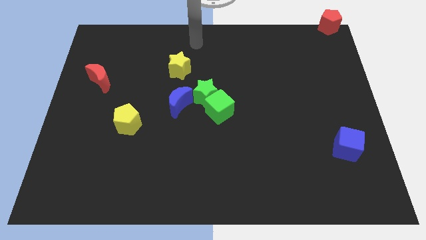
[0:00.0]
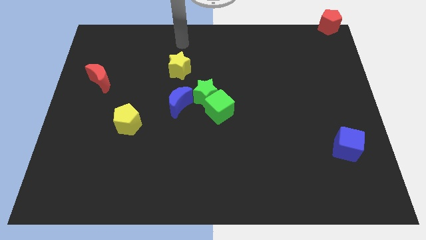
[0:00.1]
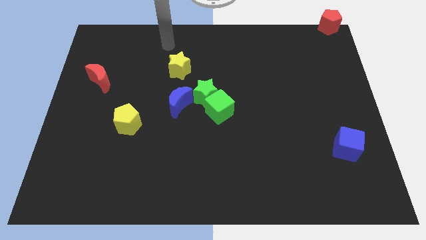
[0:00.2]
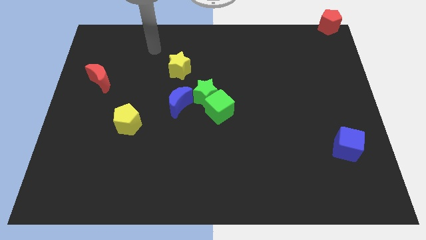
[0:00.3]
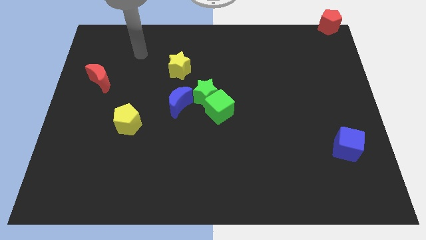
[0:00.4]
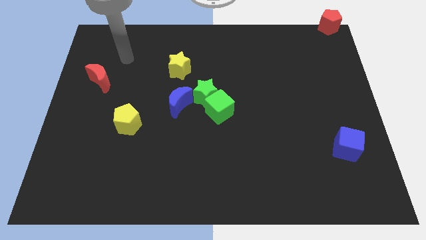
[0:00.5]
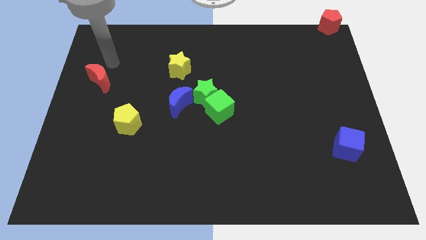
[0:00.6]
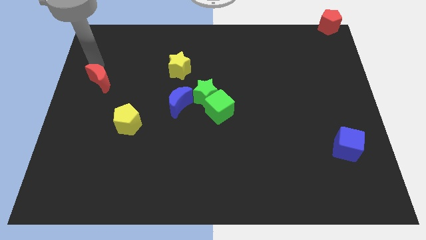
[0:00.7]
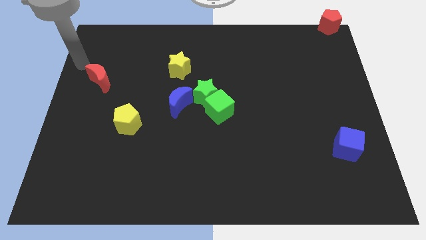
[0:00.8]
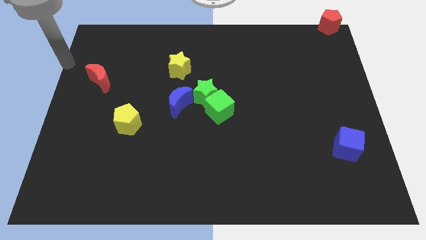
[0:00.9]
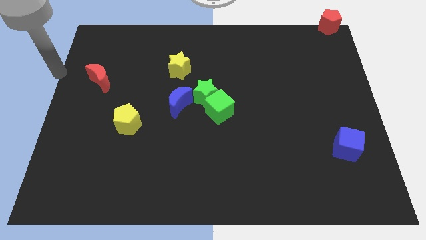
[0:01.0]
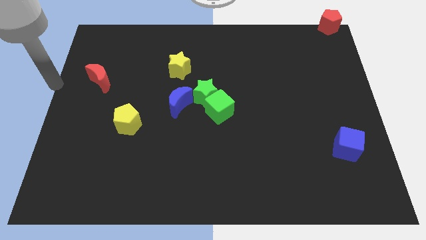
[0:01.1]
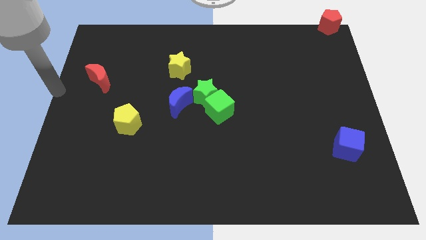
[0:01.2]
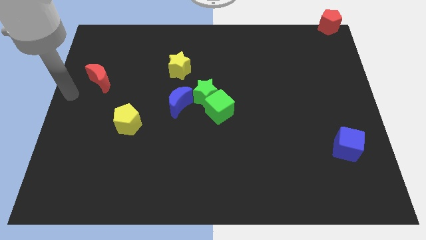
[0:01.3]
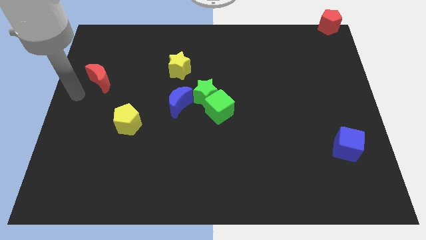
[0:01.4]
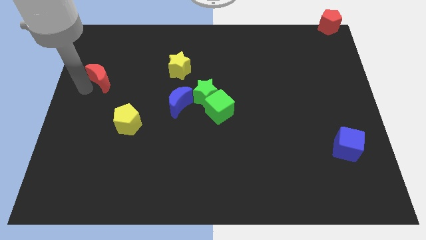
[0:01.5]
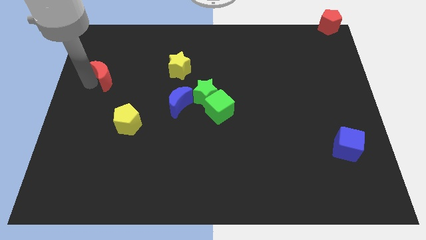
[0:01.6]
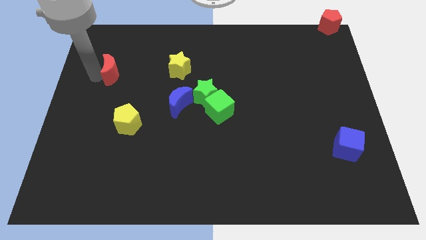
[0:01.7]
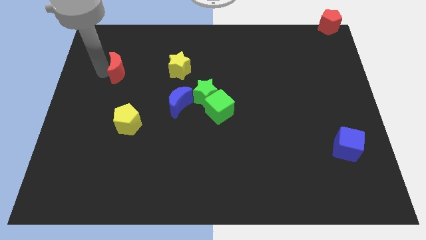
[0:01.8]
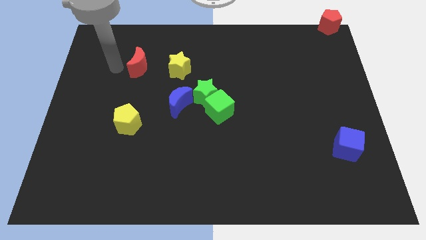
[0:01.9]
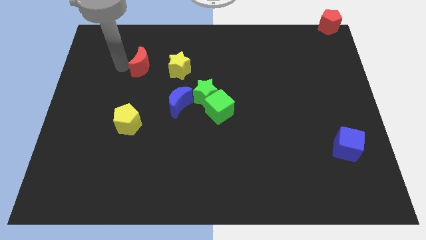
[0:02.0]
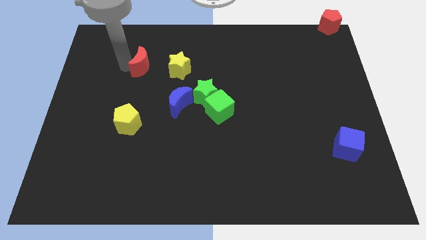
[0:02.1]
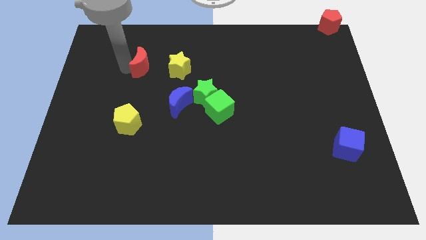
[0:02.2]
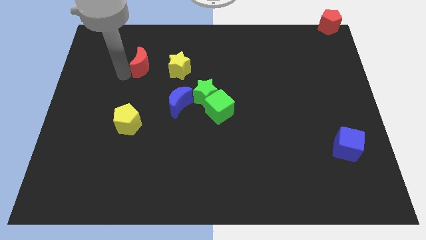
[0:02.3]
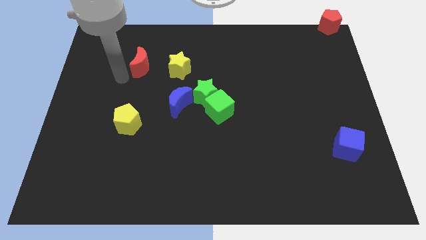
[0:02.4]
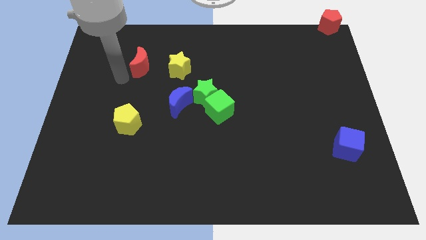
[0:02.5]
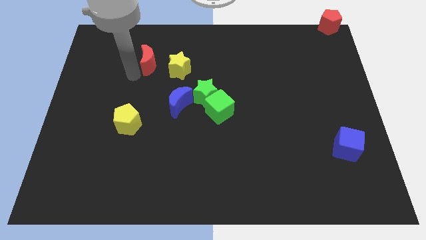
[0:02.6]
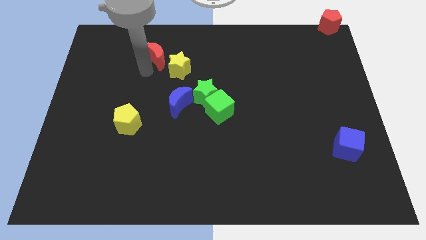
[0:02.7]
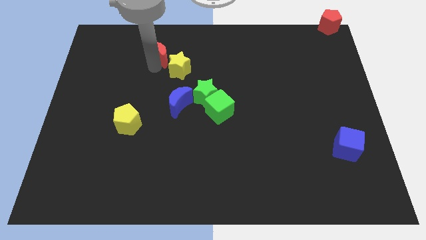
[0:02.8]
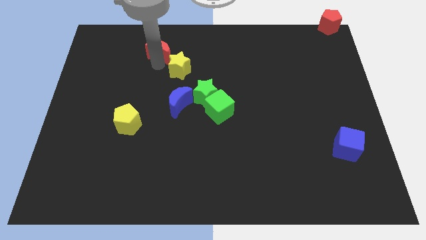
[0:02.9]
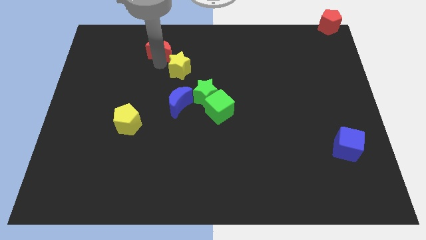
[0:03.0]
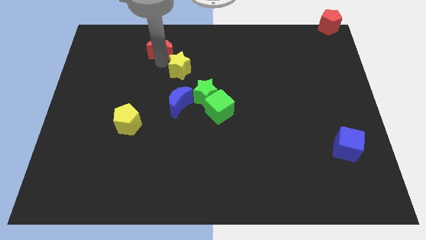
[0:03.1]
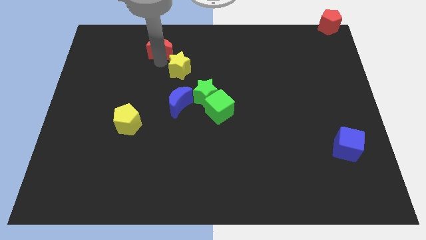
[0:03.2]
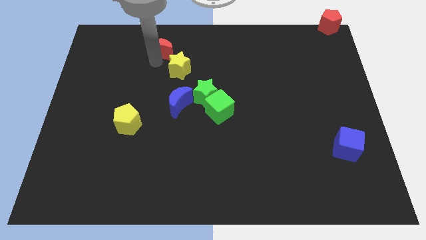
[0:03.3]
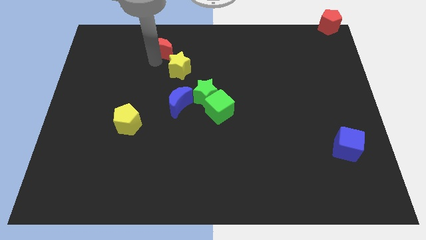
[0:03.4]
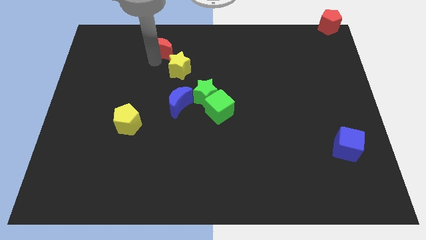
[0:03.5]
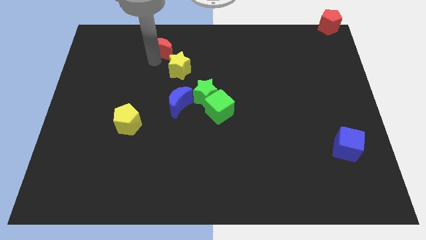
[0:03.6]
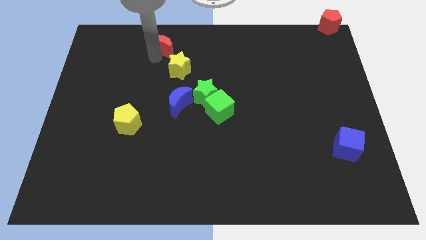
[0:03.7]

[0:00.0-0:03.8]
move the red crescent to the top left side of the yellow star

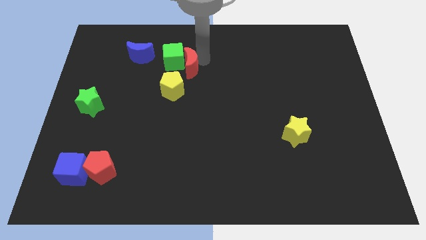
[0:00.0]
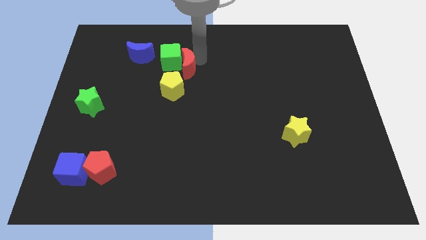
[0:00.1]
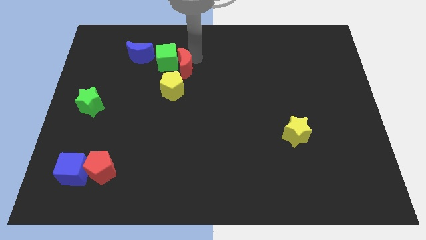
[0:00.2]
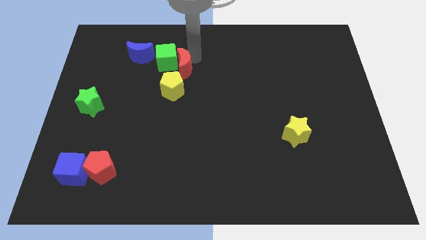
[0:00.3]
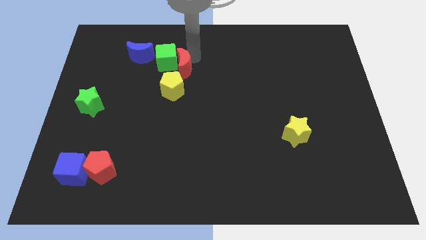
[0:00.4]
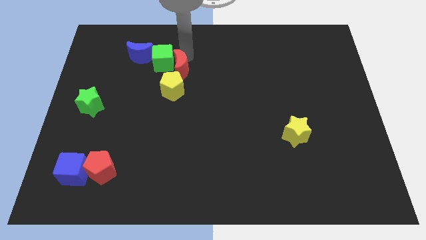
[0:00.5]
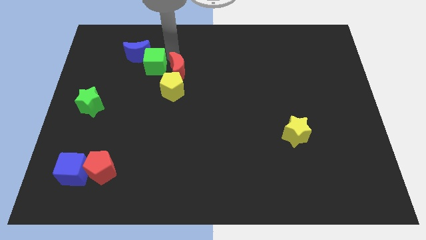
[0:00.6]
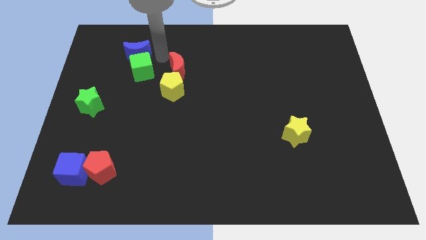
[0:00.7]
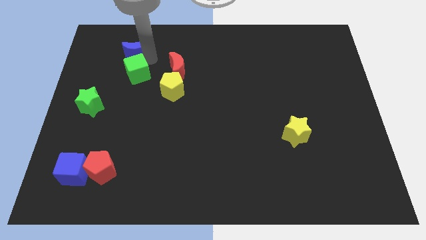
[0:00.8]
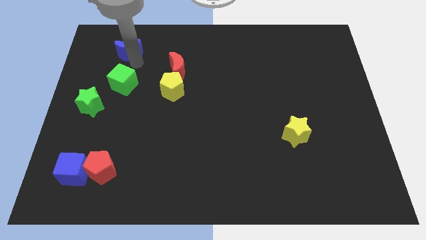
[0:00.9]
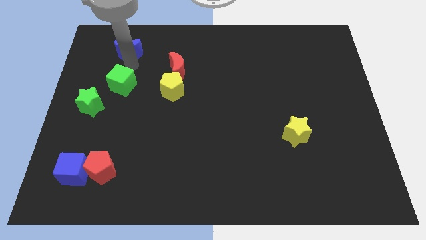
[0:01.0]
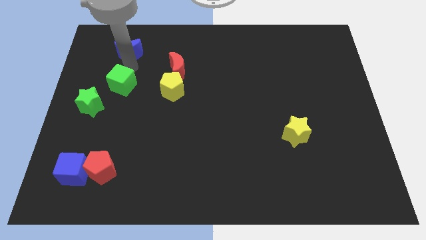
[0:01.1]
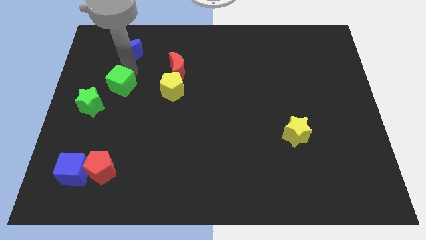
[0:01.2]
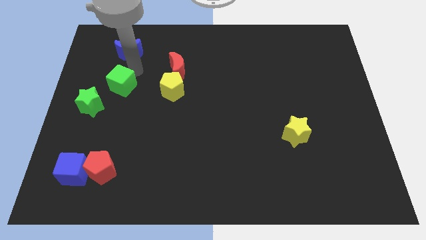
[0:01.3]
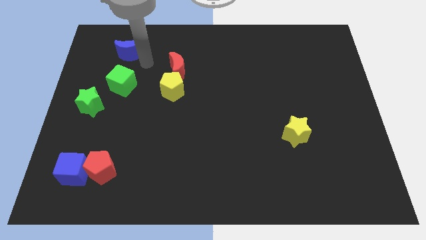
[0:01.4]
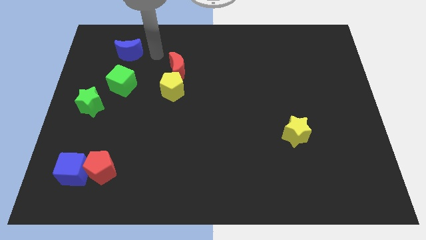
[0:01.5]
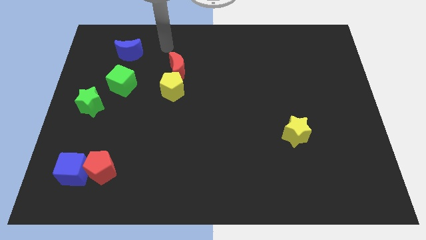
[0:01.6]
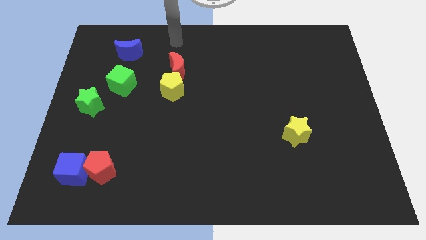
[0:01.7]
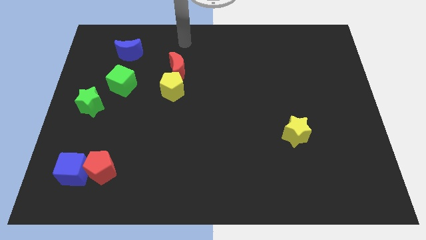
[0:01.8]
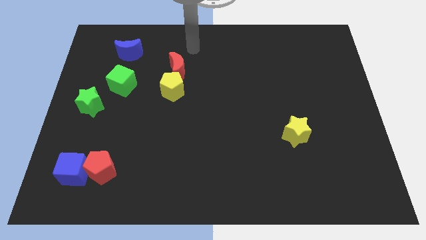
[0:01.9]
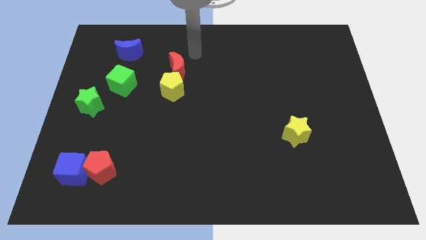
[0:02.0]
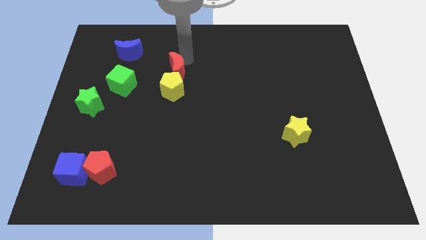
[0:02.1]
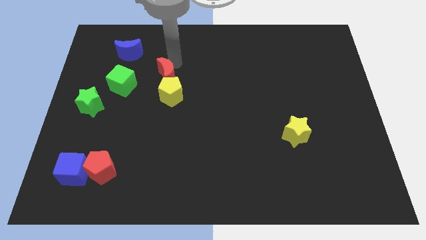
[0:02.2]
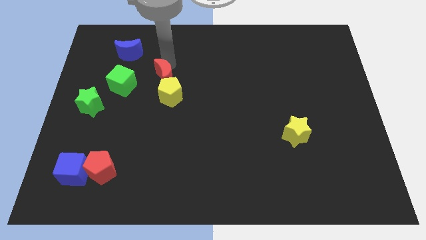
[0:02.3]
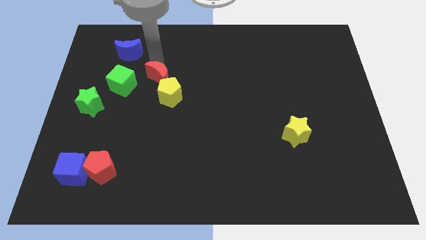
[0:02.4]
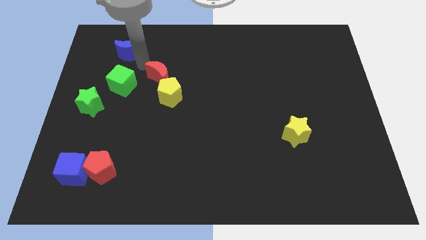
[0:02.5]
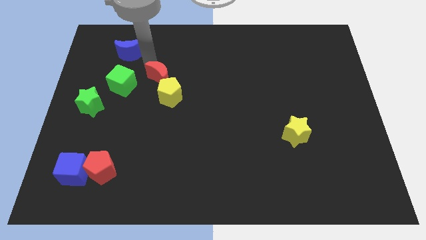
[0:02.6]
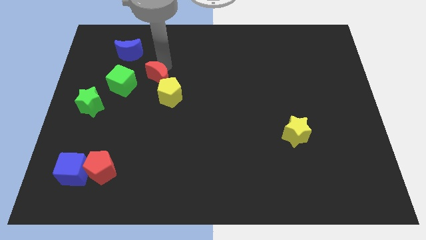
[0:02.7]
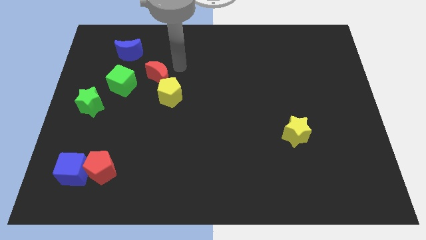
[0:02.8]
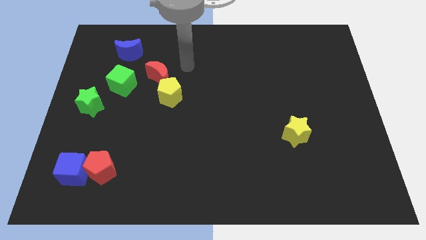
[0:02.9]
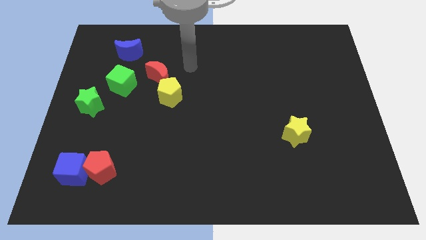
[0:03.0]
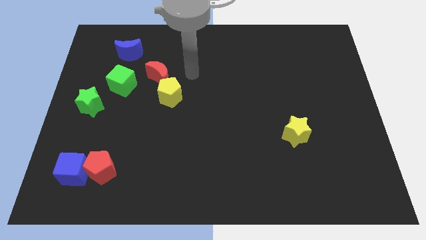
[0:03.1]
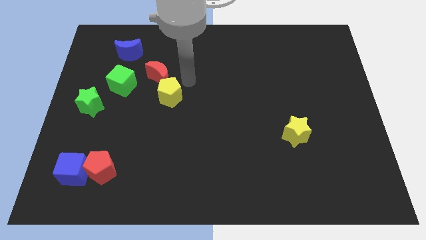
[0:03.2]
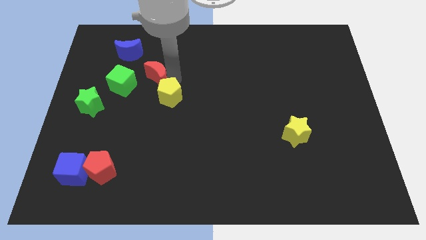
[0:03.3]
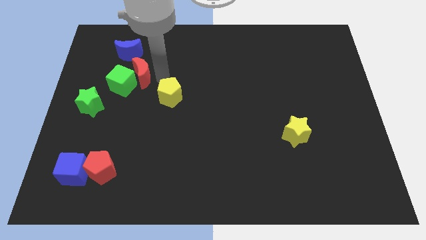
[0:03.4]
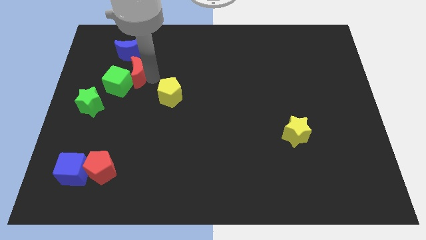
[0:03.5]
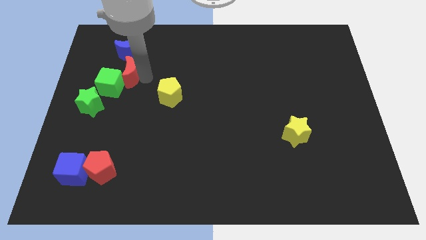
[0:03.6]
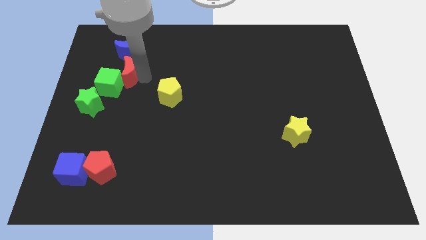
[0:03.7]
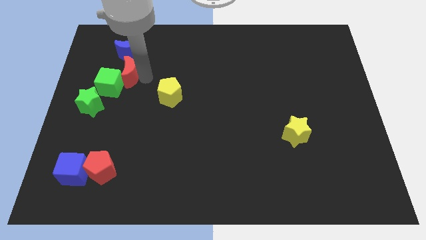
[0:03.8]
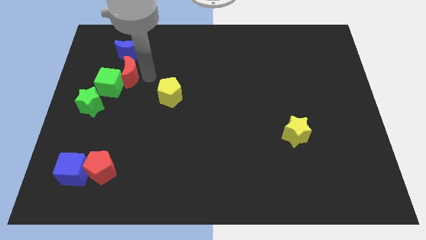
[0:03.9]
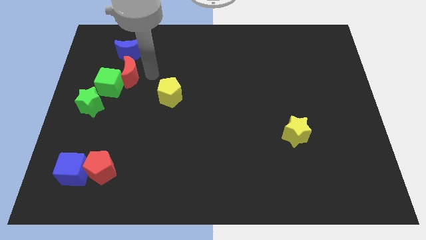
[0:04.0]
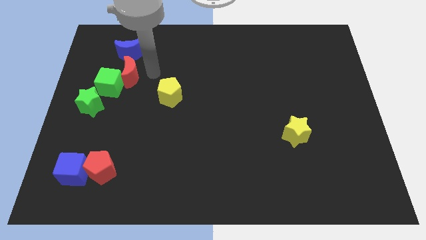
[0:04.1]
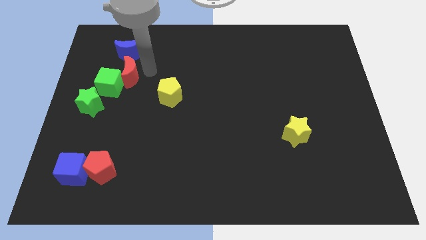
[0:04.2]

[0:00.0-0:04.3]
push the green cube and red crescent into the green star

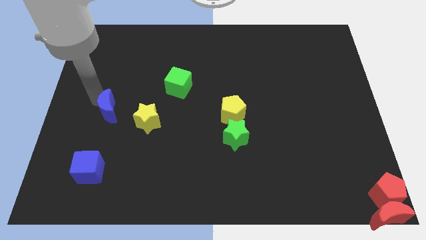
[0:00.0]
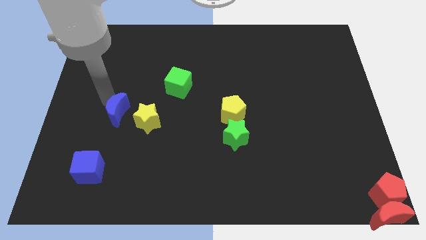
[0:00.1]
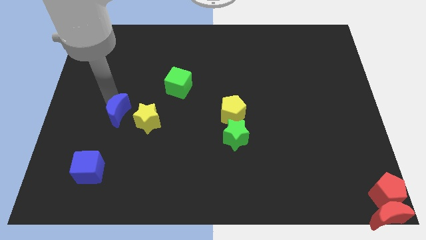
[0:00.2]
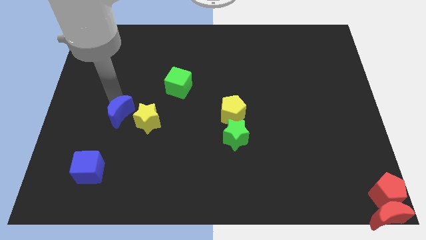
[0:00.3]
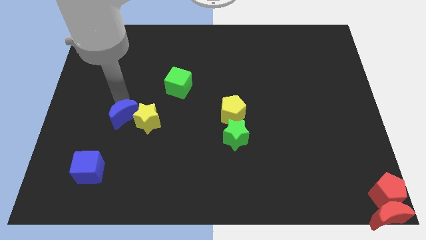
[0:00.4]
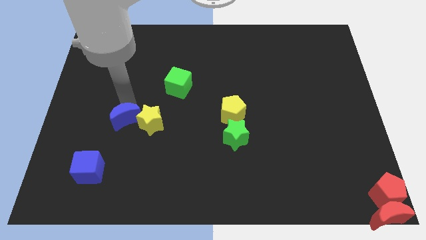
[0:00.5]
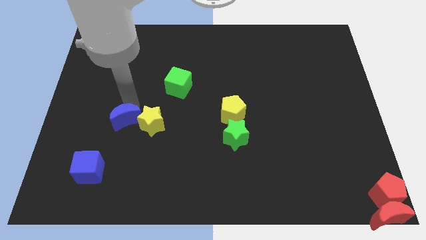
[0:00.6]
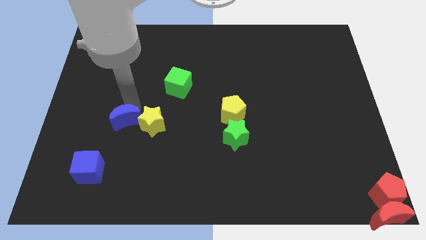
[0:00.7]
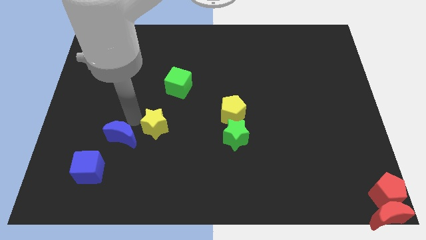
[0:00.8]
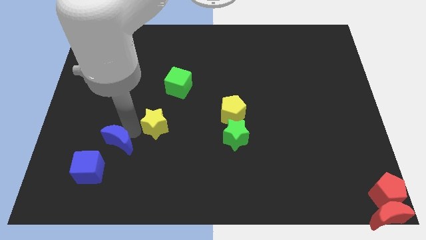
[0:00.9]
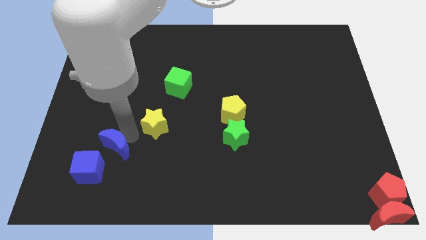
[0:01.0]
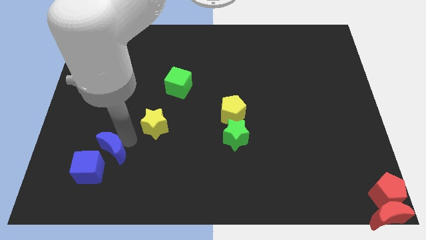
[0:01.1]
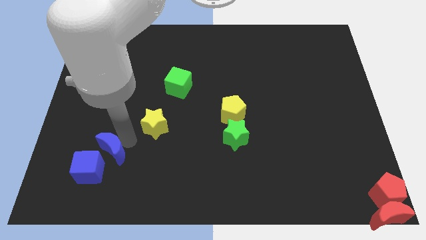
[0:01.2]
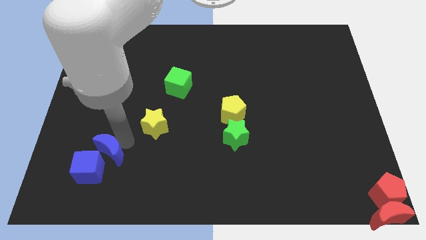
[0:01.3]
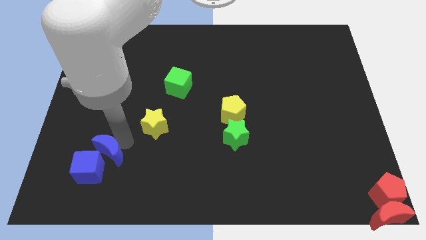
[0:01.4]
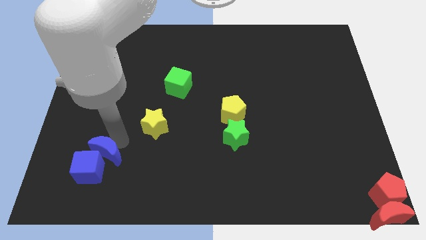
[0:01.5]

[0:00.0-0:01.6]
slide the blue moon close to the top right side of the blue cube
